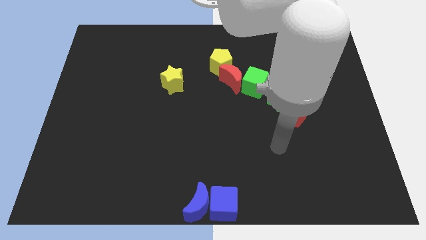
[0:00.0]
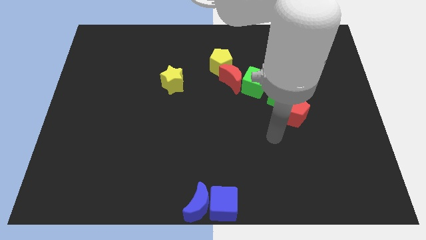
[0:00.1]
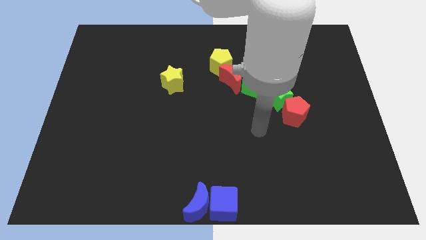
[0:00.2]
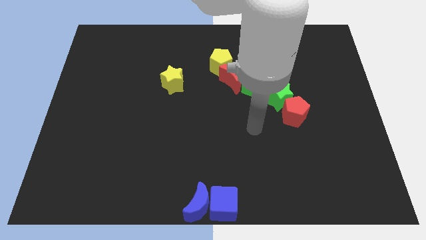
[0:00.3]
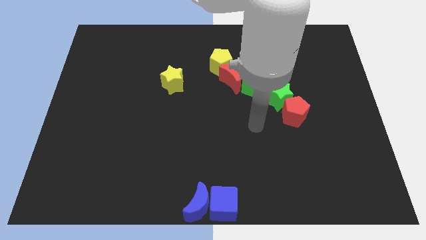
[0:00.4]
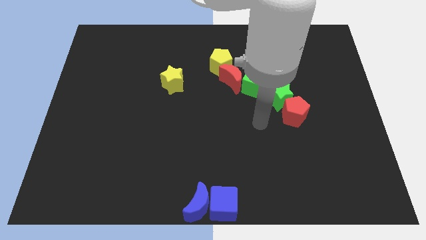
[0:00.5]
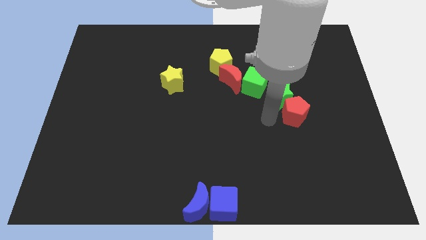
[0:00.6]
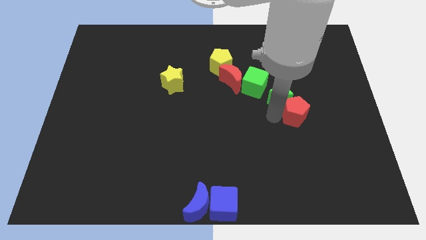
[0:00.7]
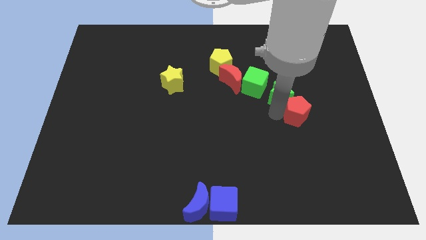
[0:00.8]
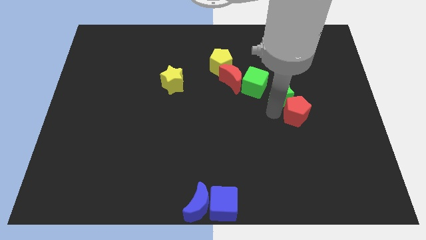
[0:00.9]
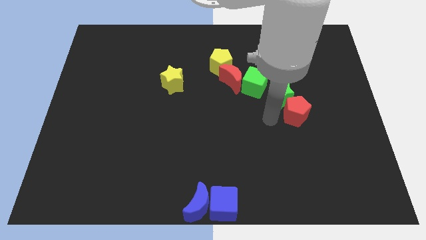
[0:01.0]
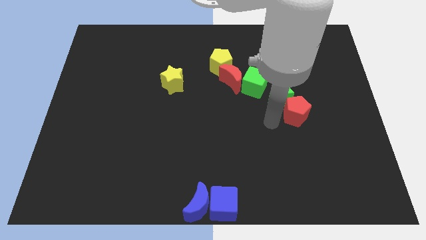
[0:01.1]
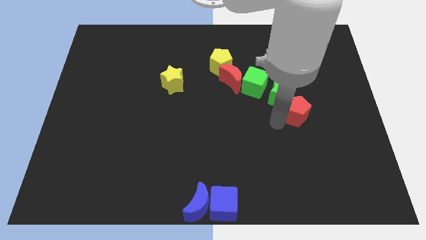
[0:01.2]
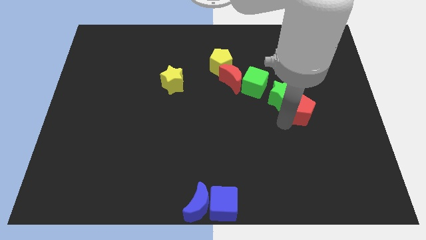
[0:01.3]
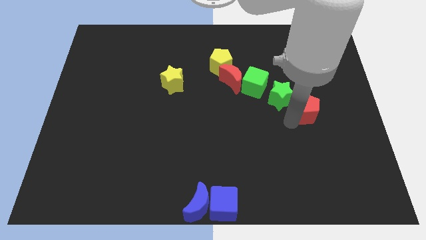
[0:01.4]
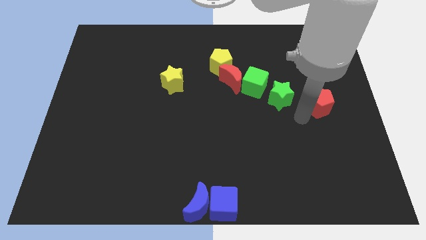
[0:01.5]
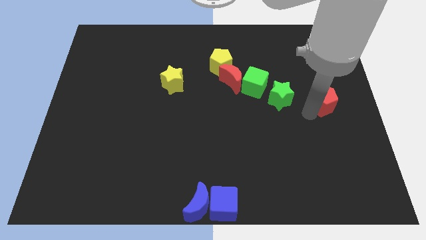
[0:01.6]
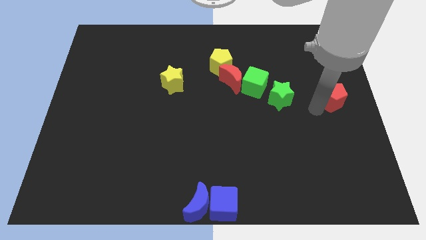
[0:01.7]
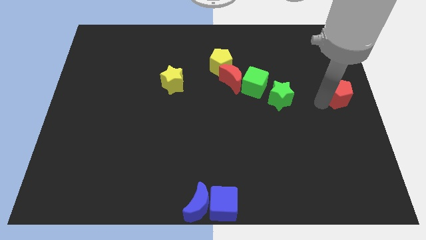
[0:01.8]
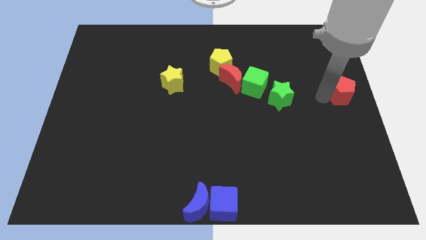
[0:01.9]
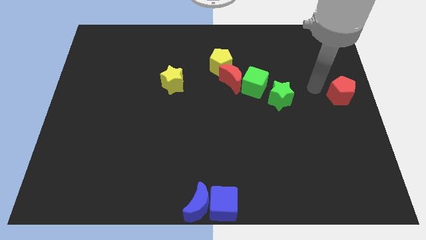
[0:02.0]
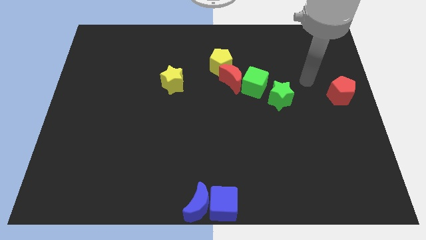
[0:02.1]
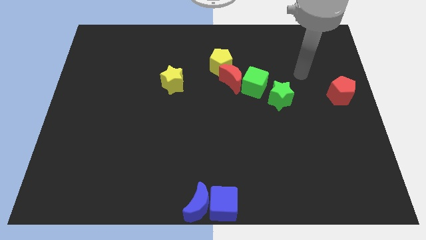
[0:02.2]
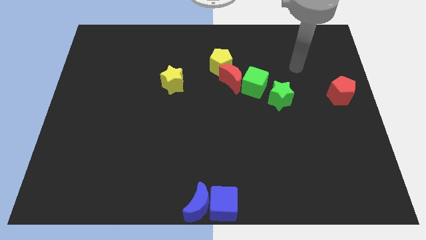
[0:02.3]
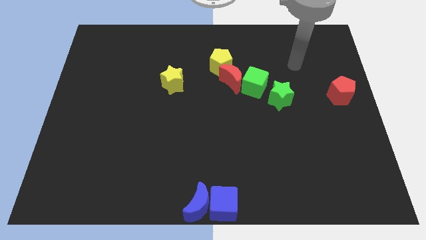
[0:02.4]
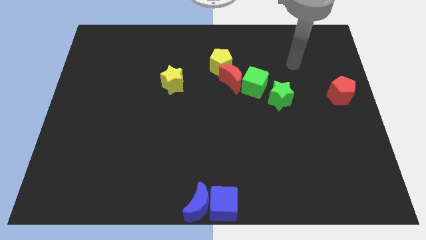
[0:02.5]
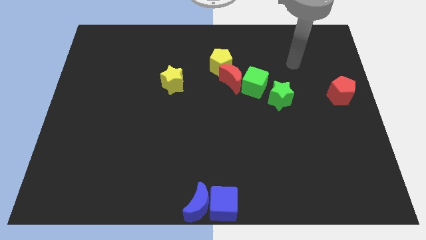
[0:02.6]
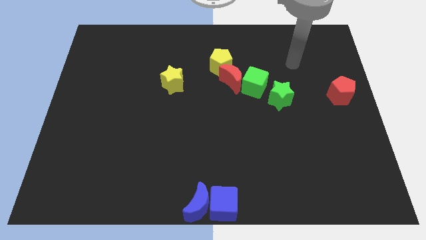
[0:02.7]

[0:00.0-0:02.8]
push the red pentagon to the center right of the board

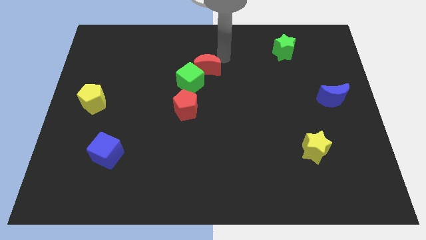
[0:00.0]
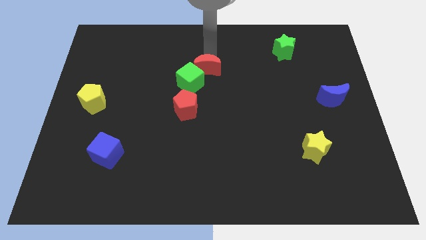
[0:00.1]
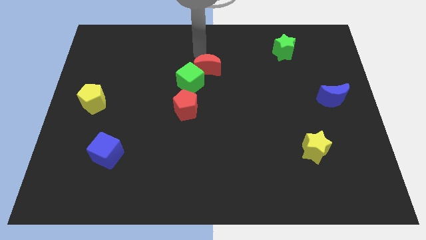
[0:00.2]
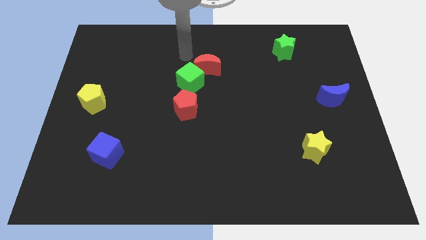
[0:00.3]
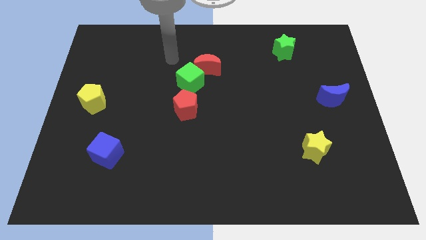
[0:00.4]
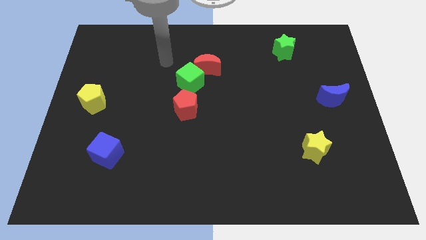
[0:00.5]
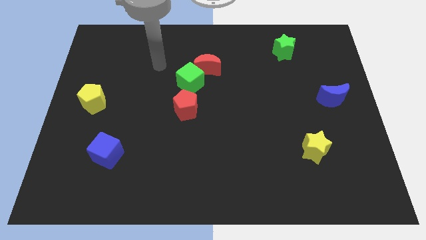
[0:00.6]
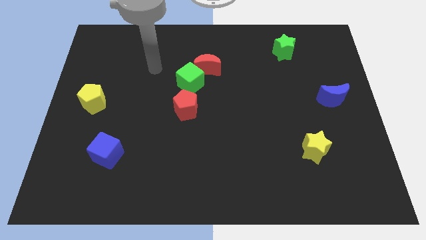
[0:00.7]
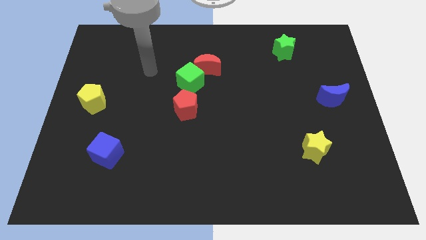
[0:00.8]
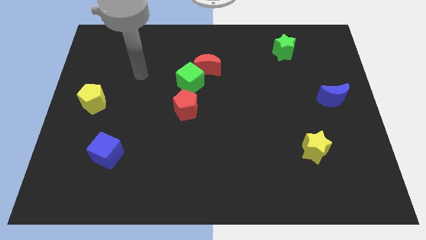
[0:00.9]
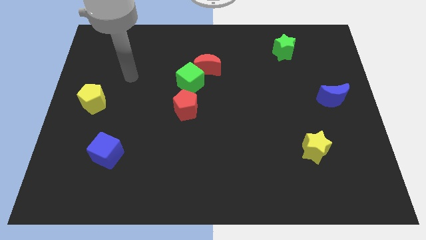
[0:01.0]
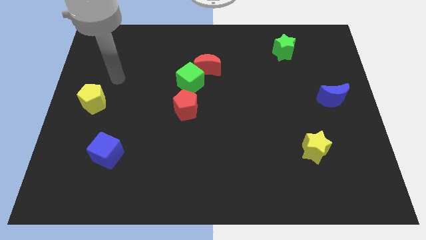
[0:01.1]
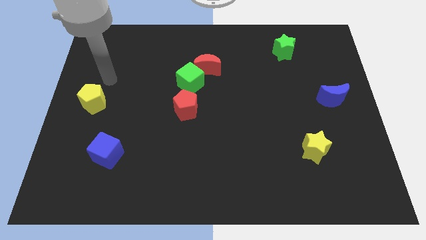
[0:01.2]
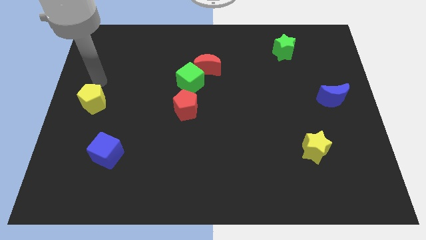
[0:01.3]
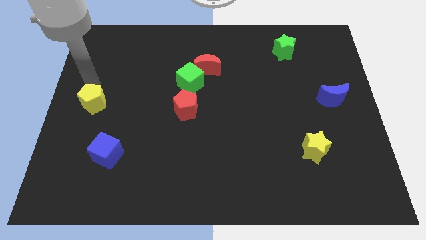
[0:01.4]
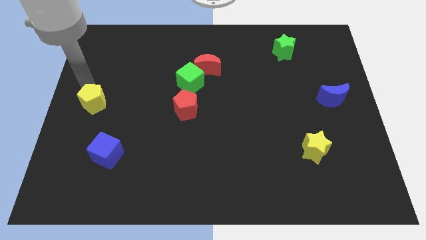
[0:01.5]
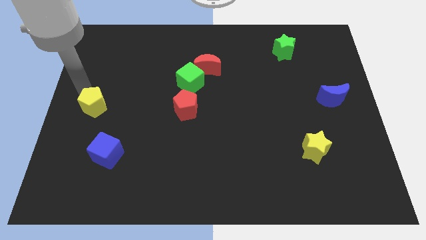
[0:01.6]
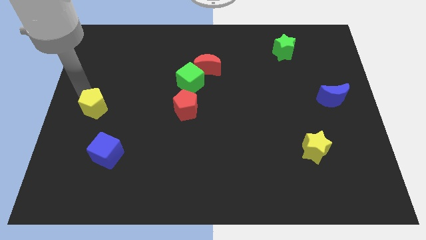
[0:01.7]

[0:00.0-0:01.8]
tap yellow pentagon

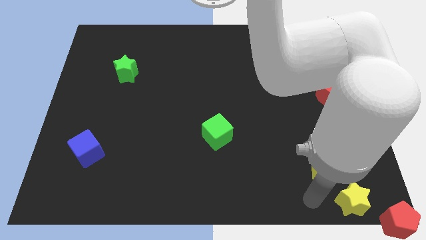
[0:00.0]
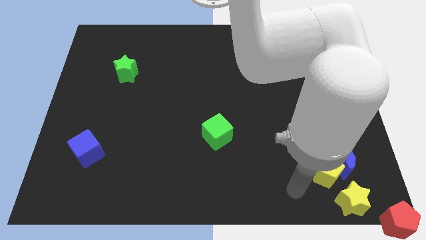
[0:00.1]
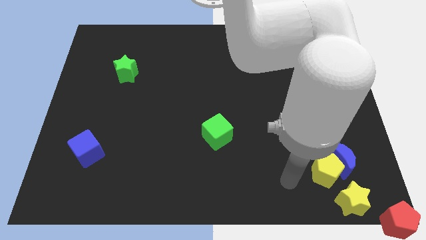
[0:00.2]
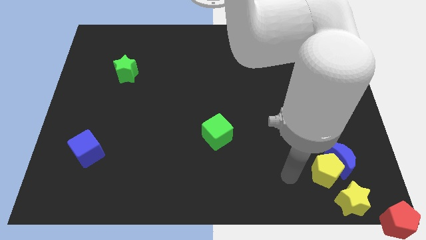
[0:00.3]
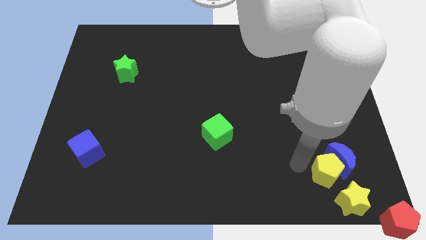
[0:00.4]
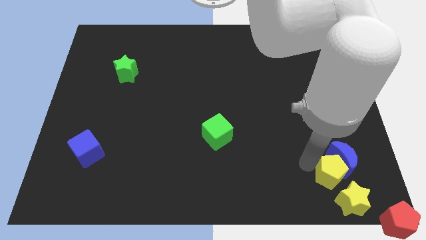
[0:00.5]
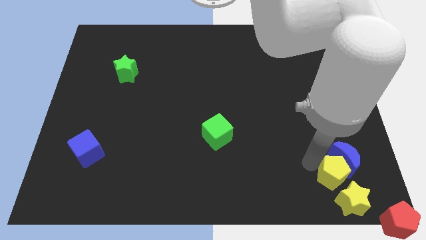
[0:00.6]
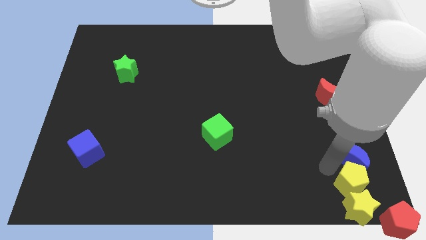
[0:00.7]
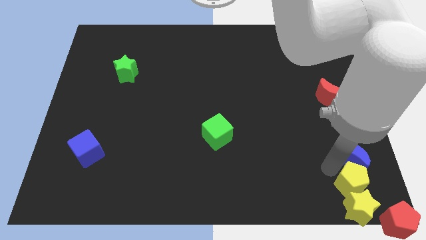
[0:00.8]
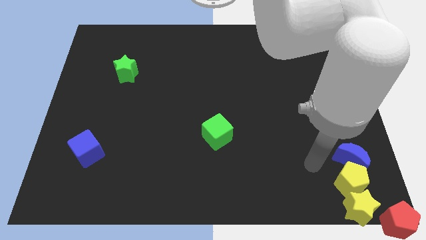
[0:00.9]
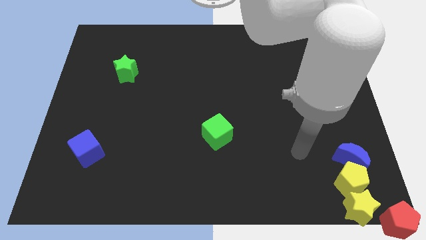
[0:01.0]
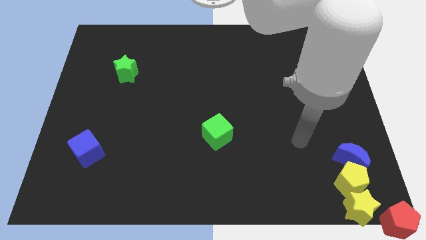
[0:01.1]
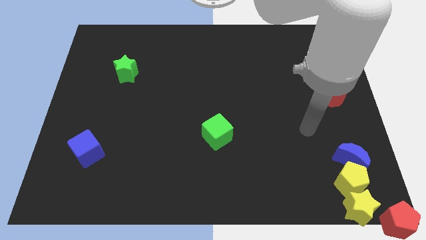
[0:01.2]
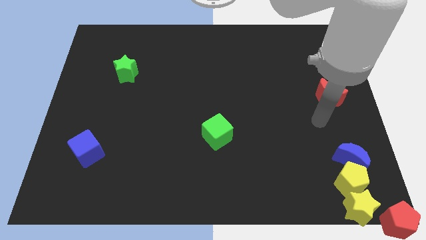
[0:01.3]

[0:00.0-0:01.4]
arrange the yellow blocks below the blue moon

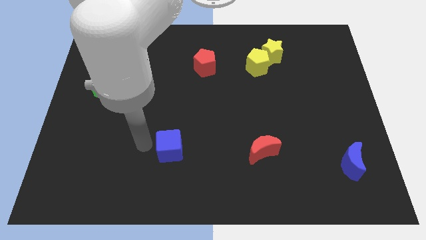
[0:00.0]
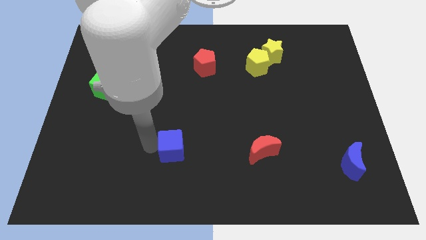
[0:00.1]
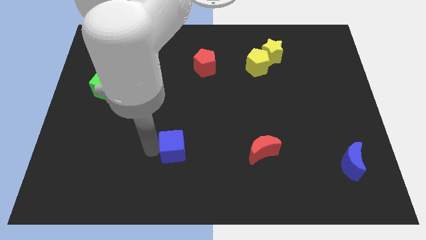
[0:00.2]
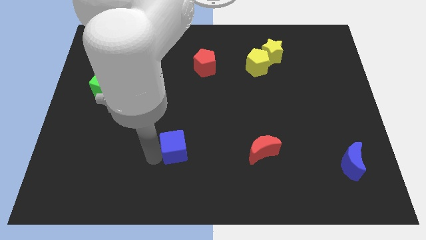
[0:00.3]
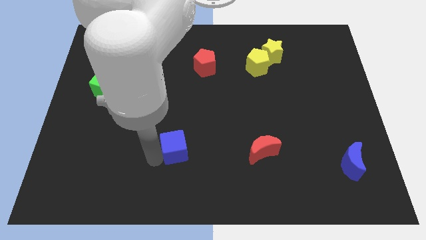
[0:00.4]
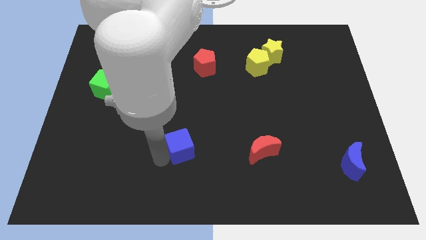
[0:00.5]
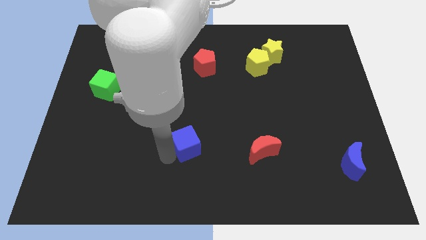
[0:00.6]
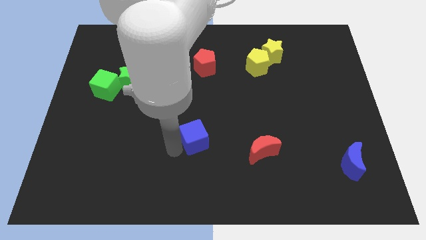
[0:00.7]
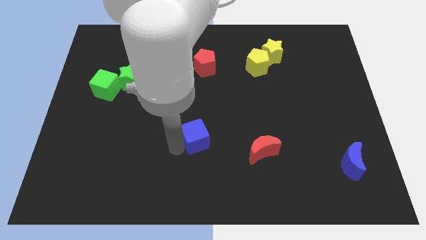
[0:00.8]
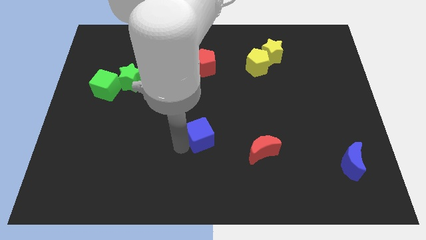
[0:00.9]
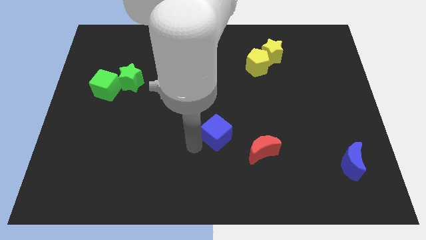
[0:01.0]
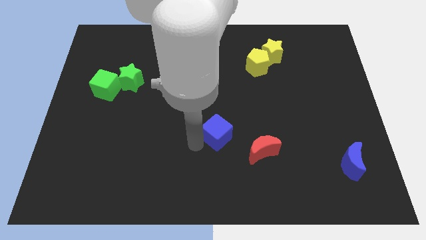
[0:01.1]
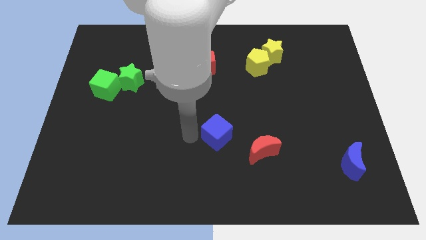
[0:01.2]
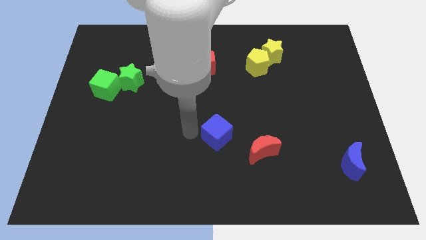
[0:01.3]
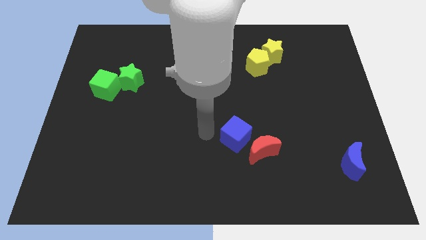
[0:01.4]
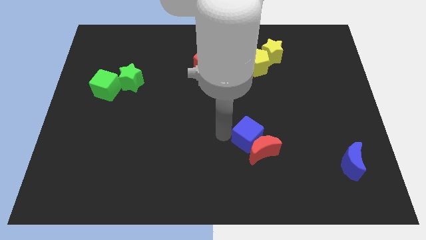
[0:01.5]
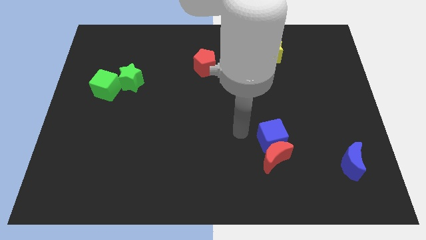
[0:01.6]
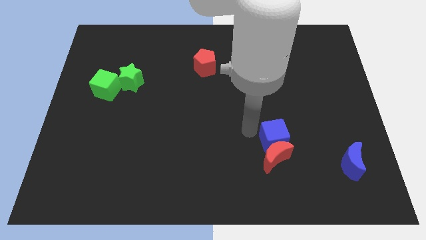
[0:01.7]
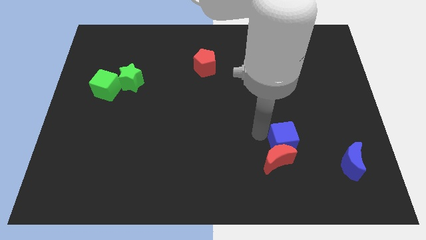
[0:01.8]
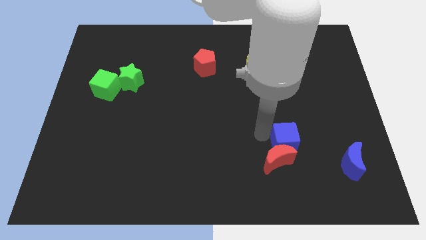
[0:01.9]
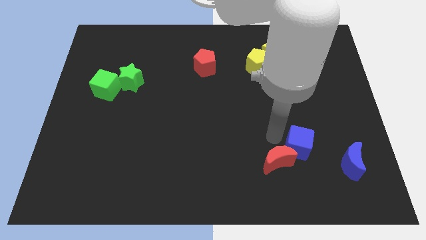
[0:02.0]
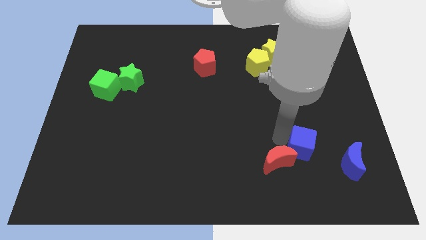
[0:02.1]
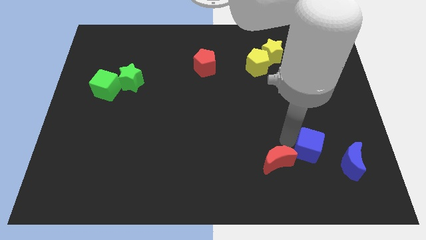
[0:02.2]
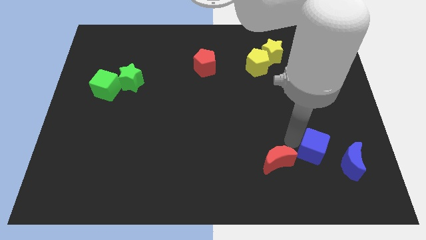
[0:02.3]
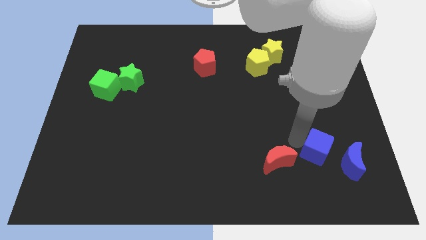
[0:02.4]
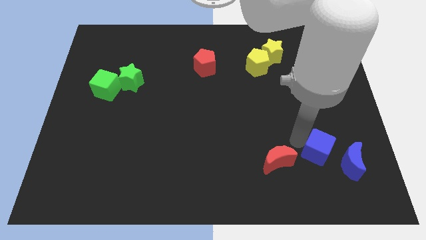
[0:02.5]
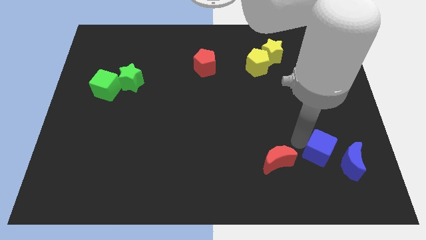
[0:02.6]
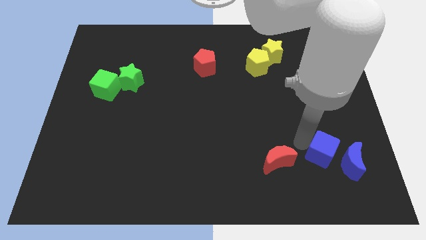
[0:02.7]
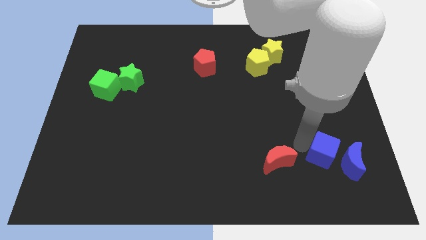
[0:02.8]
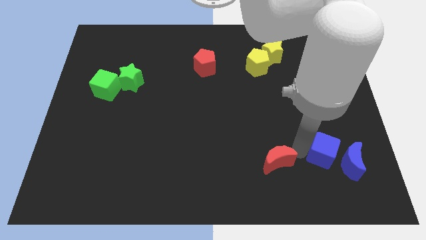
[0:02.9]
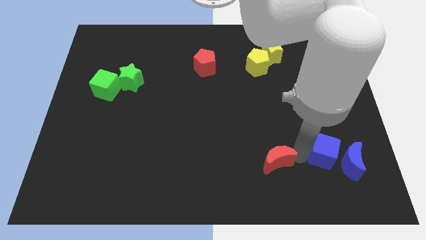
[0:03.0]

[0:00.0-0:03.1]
move the blue cube left to the blue crescent
